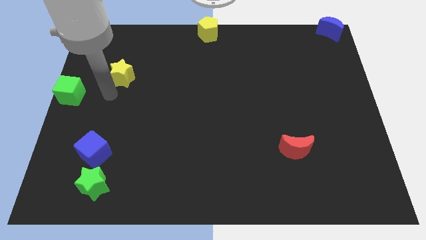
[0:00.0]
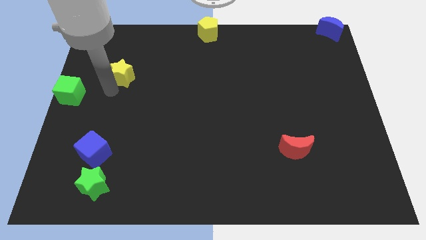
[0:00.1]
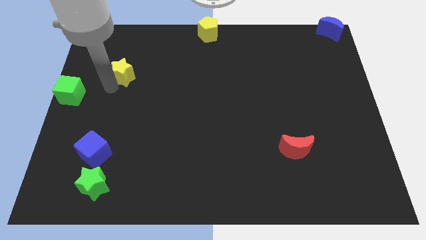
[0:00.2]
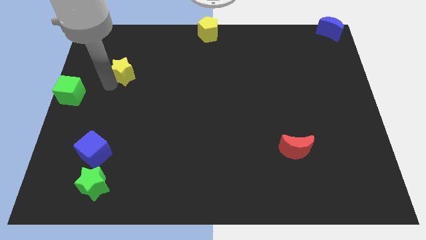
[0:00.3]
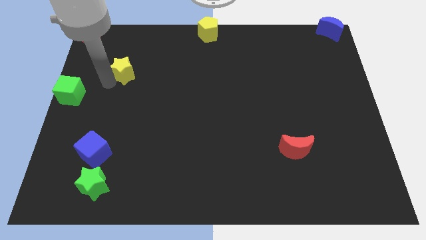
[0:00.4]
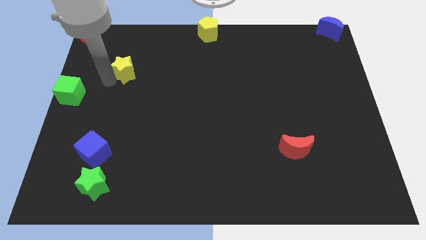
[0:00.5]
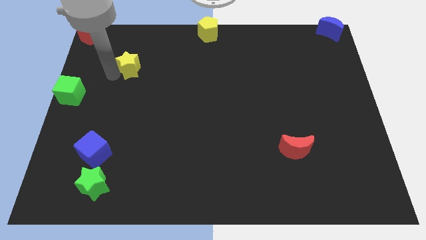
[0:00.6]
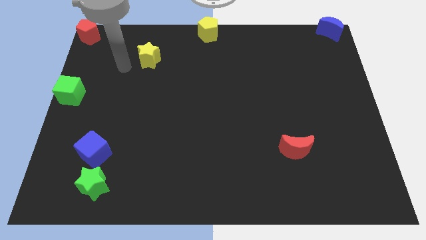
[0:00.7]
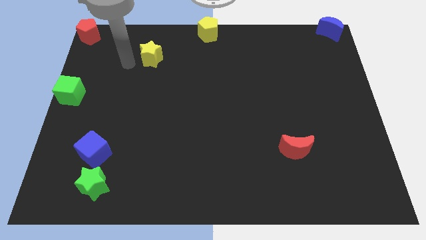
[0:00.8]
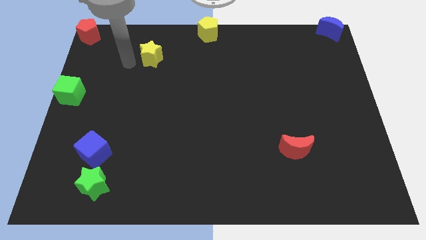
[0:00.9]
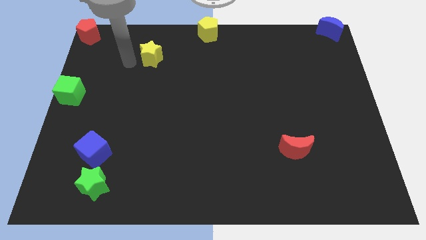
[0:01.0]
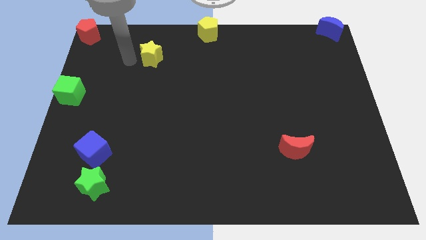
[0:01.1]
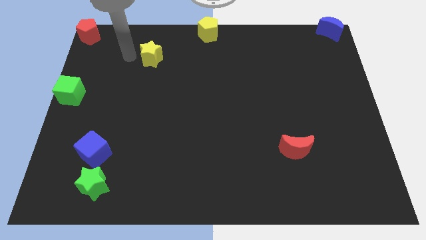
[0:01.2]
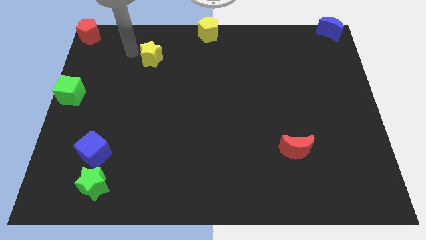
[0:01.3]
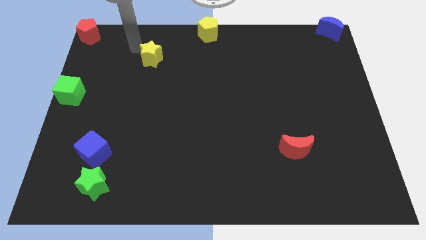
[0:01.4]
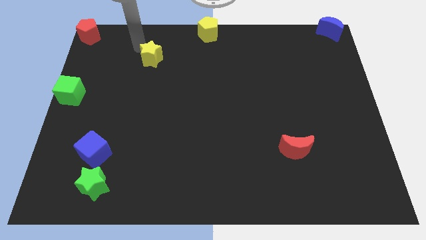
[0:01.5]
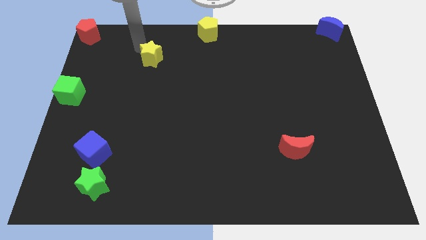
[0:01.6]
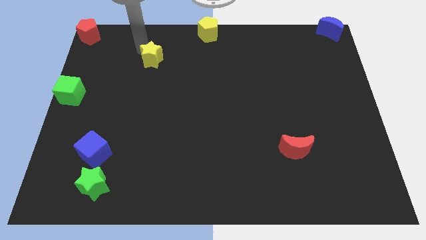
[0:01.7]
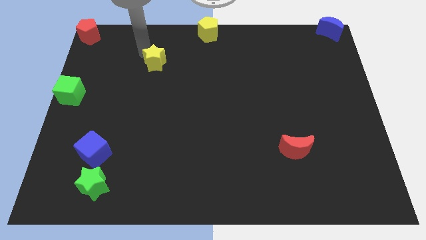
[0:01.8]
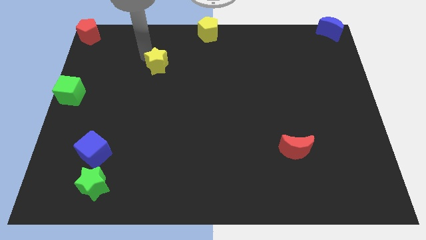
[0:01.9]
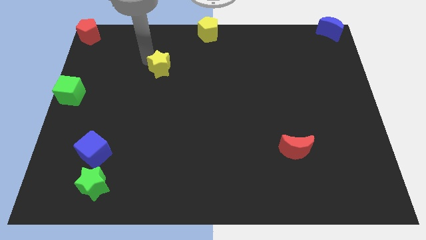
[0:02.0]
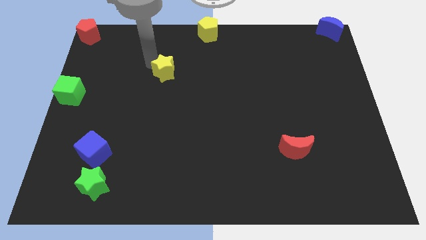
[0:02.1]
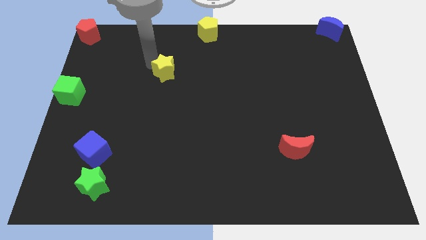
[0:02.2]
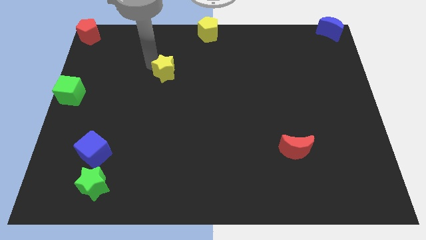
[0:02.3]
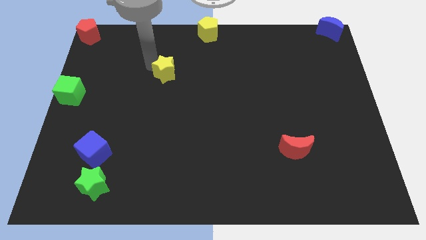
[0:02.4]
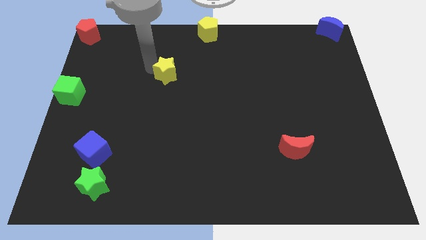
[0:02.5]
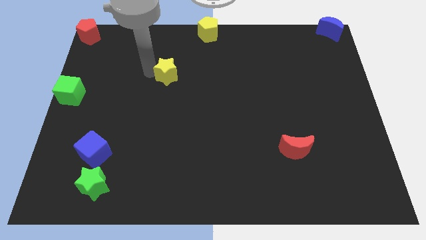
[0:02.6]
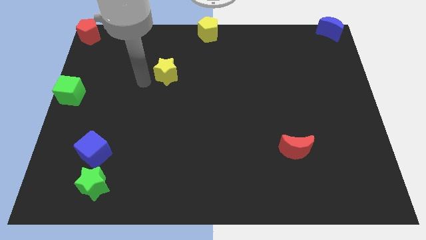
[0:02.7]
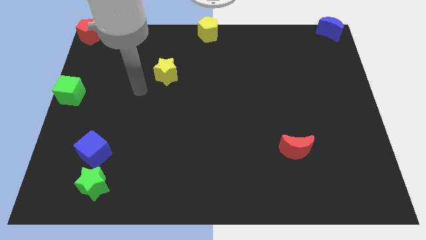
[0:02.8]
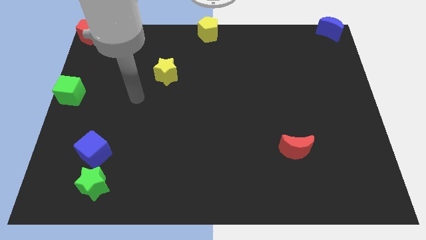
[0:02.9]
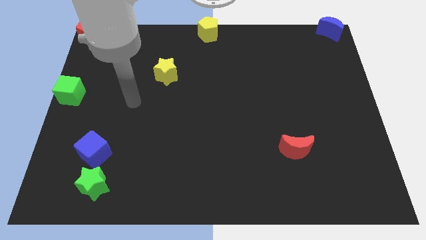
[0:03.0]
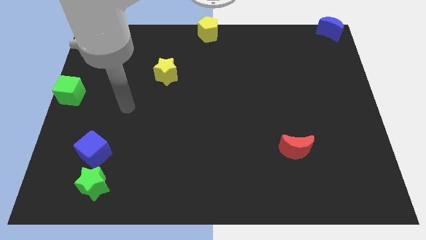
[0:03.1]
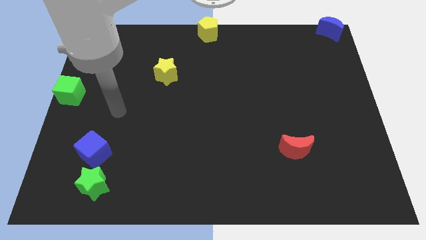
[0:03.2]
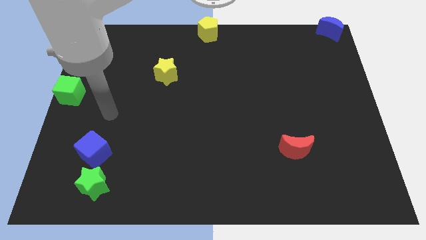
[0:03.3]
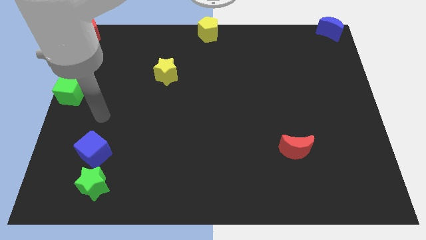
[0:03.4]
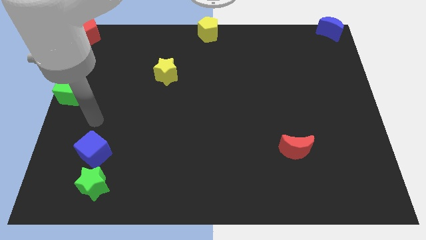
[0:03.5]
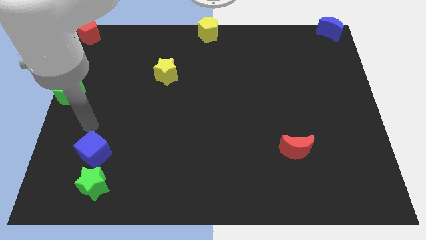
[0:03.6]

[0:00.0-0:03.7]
put the yellow star diagonally in between the yellow pentagon and blue cube

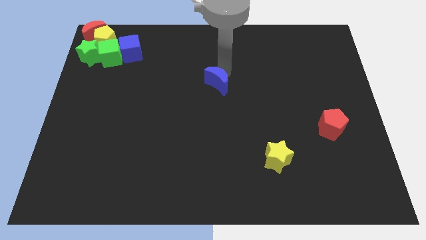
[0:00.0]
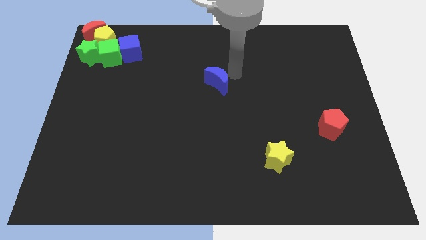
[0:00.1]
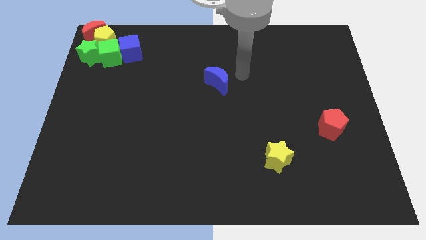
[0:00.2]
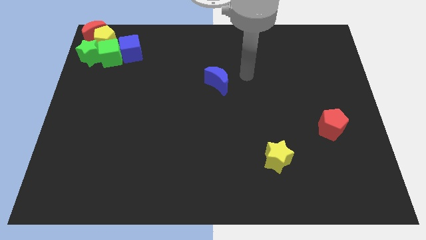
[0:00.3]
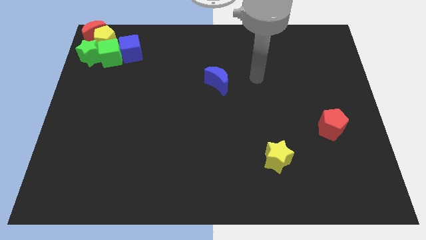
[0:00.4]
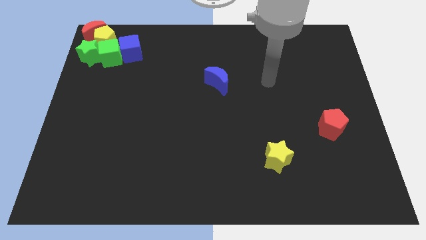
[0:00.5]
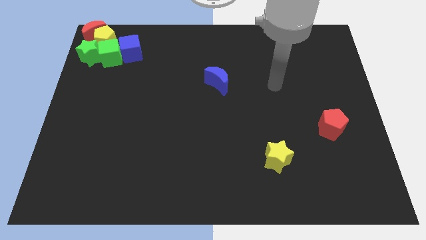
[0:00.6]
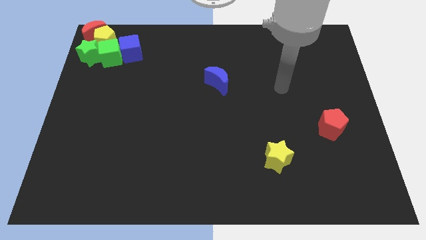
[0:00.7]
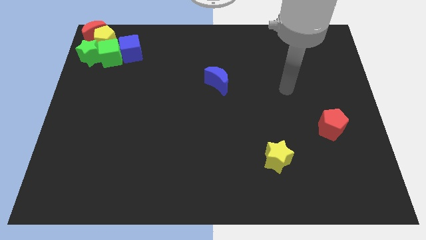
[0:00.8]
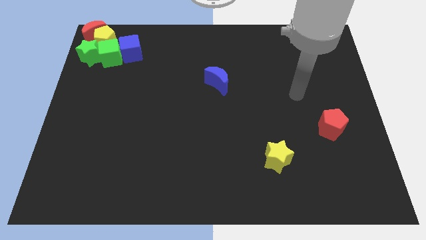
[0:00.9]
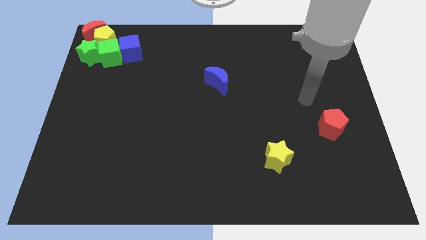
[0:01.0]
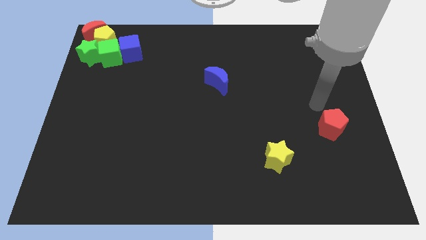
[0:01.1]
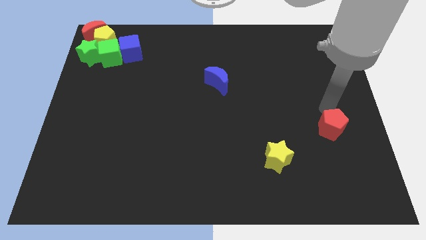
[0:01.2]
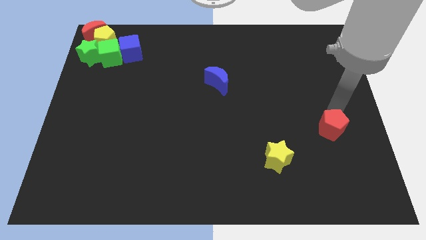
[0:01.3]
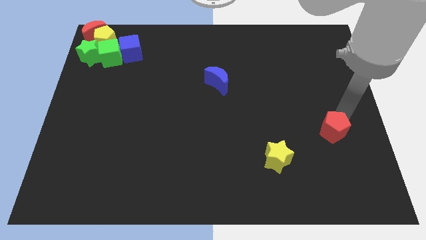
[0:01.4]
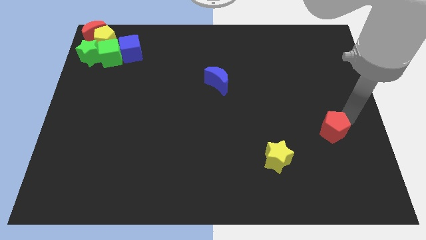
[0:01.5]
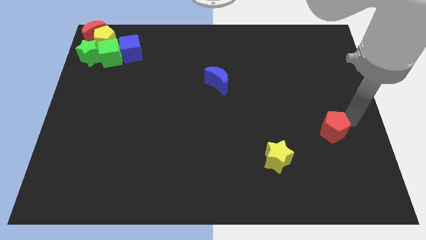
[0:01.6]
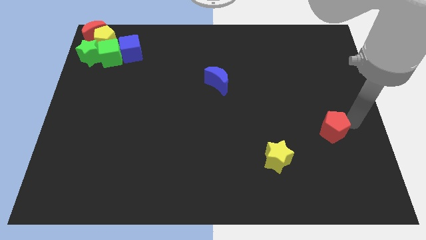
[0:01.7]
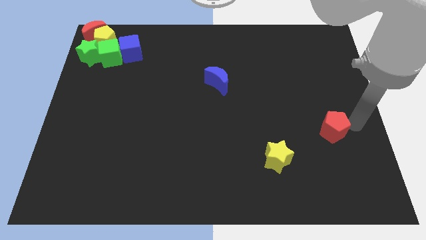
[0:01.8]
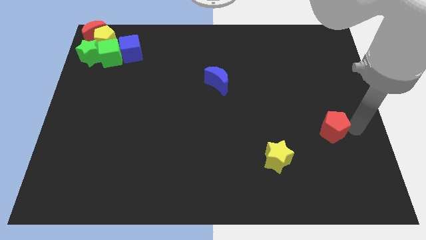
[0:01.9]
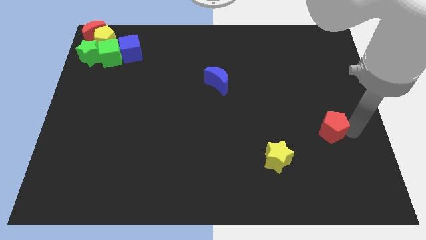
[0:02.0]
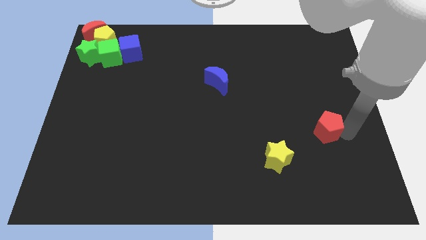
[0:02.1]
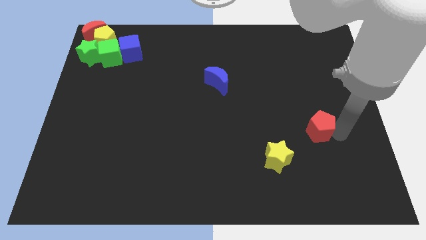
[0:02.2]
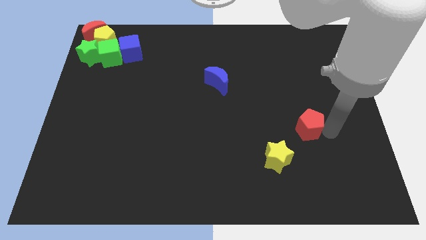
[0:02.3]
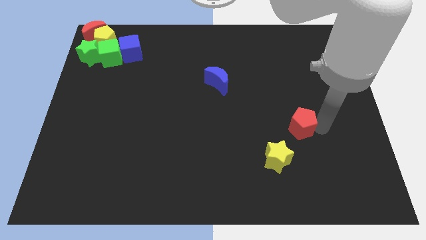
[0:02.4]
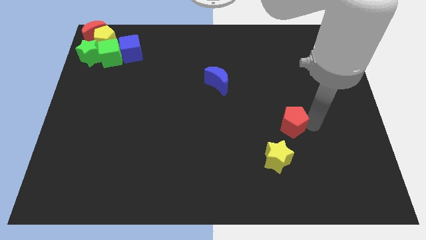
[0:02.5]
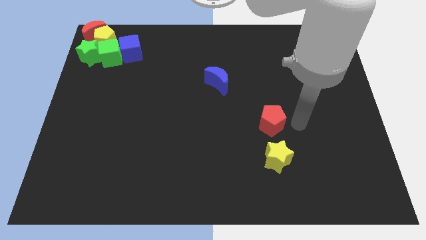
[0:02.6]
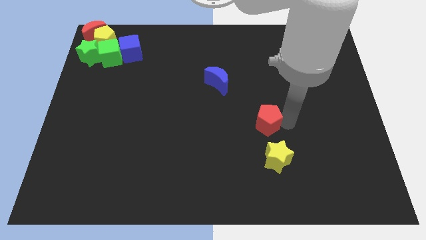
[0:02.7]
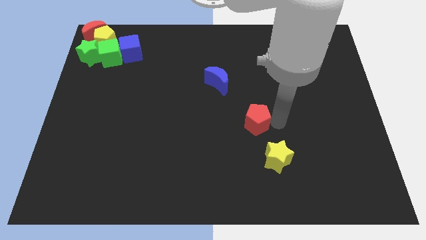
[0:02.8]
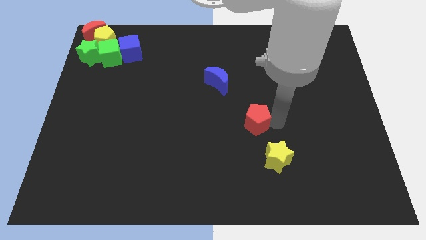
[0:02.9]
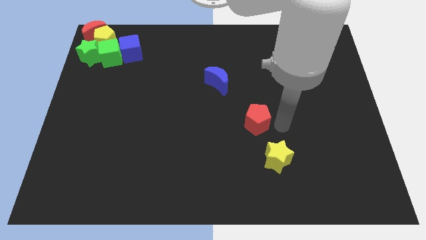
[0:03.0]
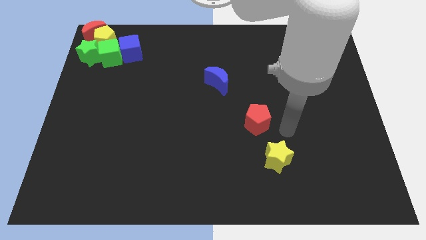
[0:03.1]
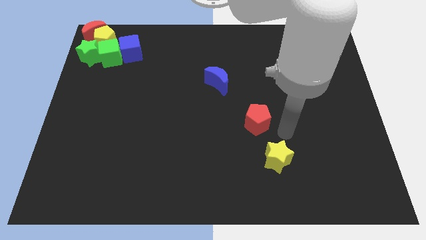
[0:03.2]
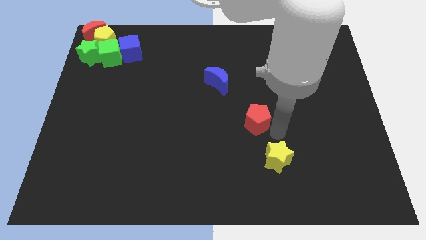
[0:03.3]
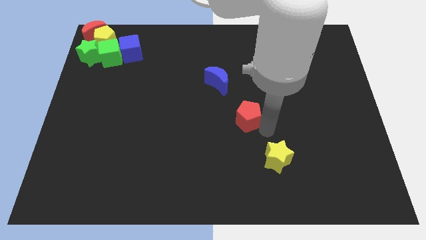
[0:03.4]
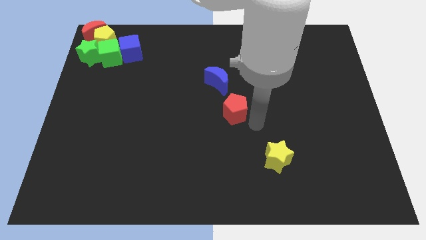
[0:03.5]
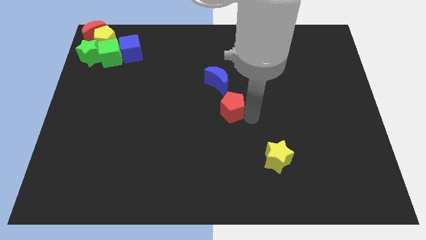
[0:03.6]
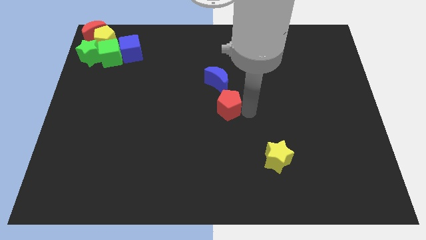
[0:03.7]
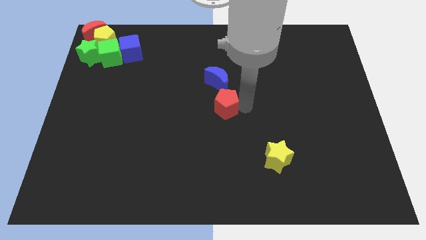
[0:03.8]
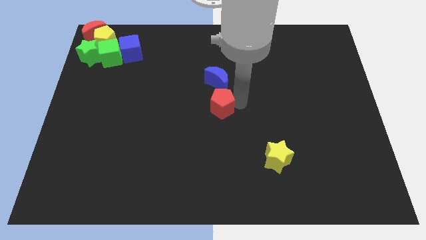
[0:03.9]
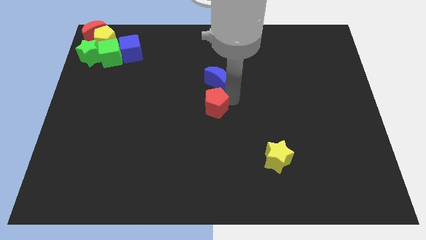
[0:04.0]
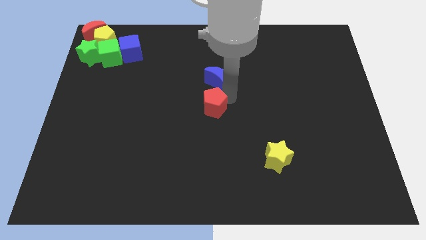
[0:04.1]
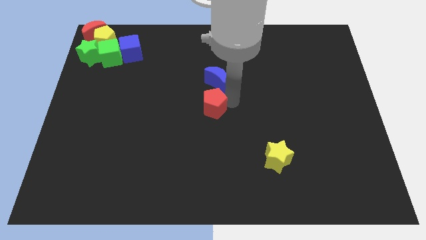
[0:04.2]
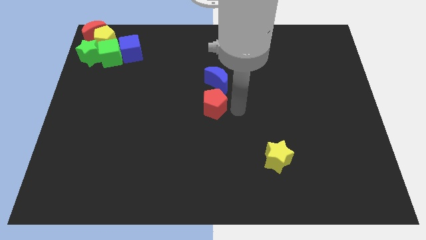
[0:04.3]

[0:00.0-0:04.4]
move red pentagon left below the blue moon

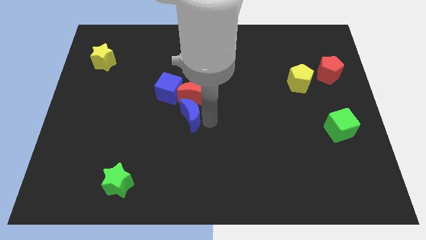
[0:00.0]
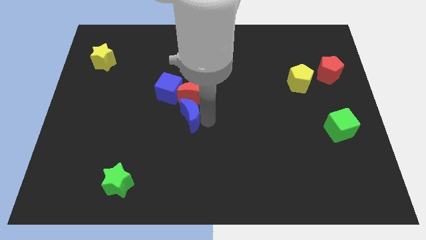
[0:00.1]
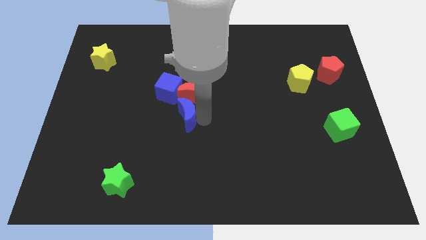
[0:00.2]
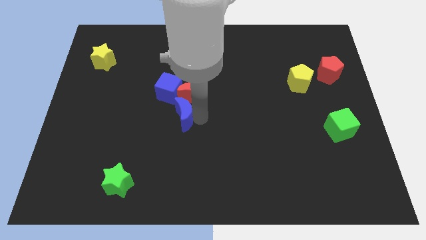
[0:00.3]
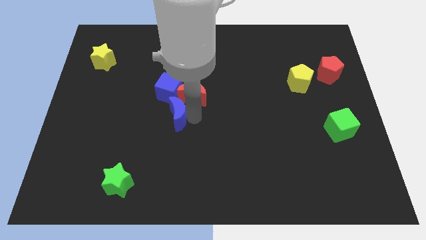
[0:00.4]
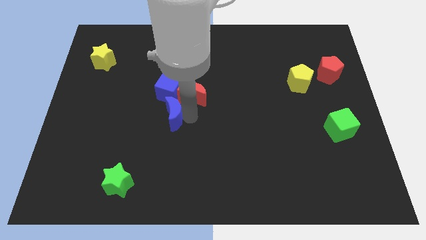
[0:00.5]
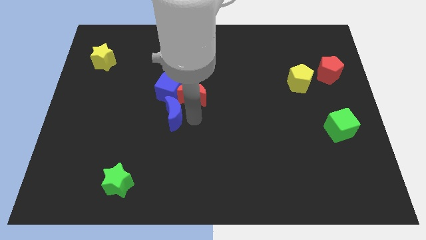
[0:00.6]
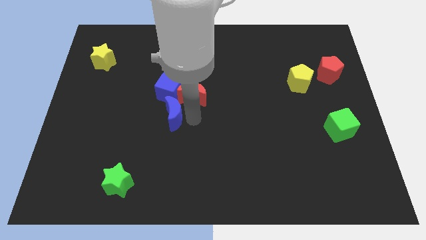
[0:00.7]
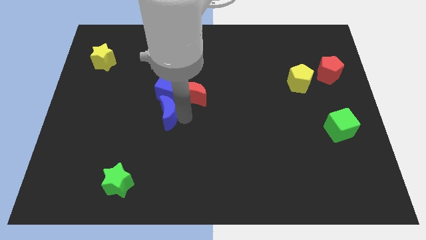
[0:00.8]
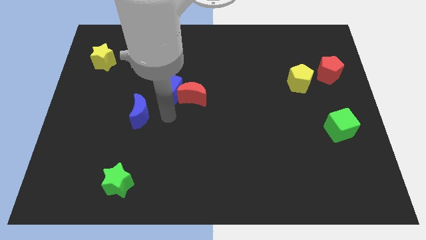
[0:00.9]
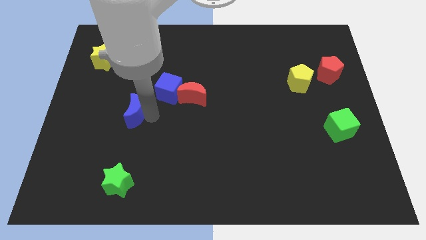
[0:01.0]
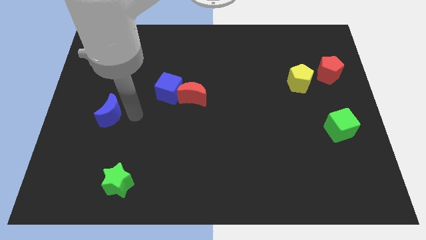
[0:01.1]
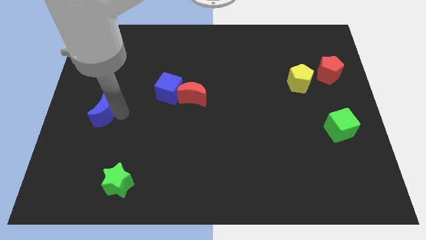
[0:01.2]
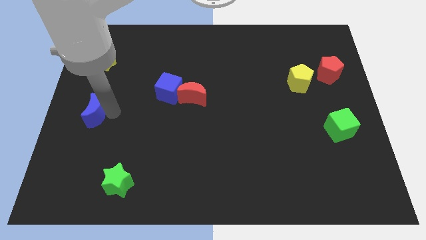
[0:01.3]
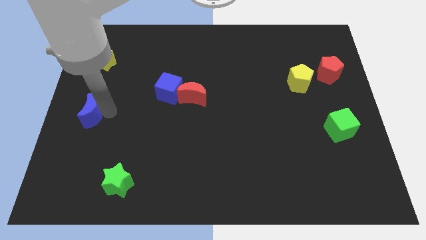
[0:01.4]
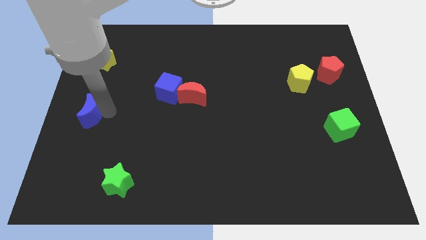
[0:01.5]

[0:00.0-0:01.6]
push blue moon to the bottom of the yellow star
